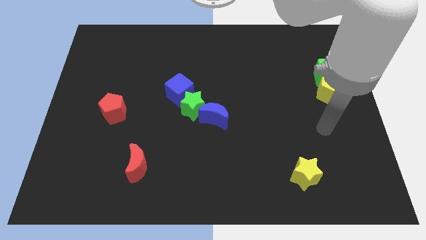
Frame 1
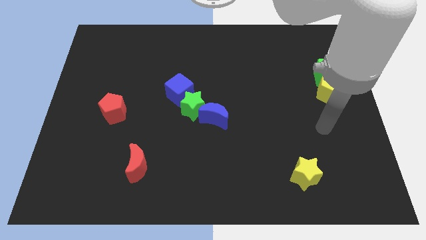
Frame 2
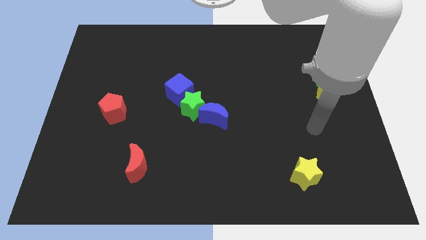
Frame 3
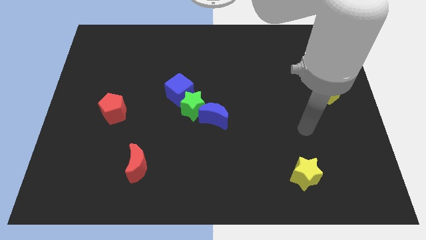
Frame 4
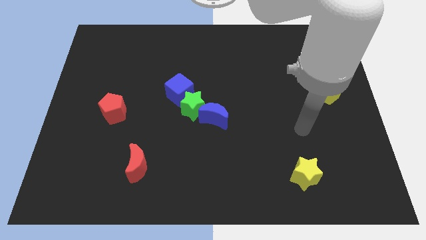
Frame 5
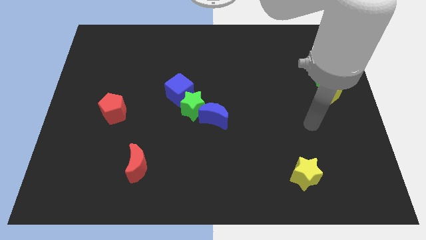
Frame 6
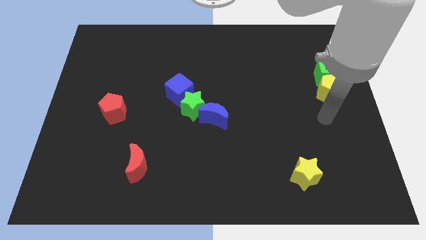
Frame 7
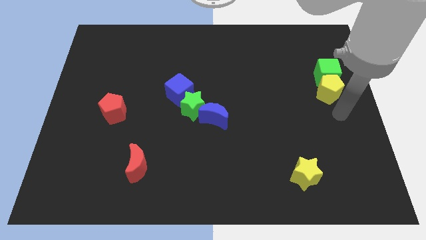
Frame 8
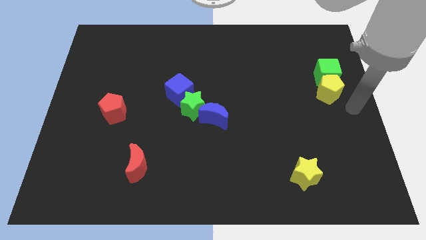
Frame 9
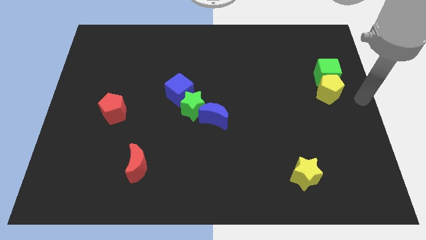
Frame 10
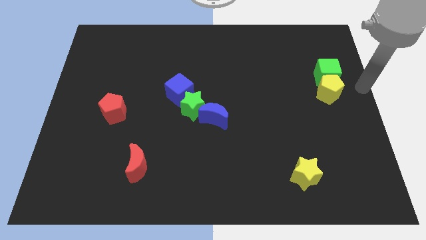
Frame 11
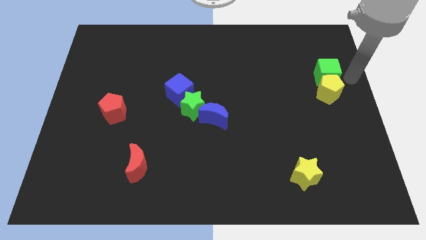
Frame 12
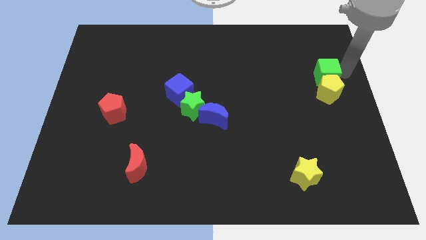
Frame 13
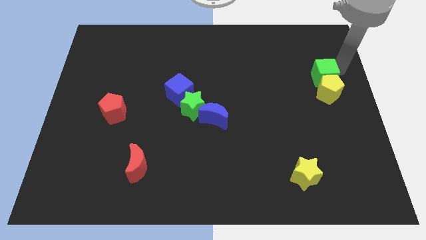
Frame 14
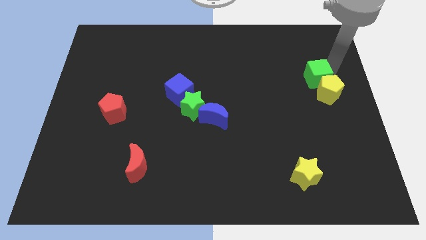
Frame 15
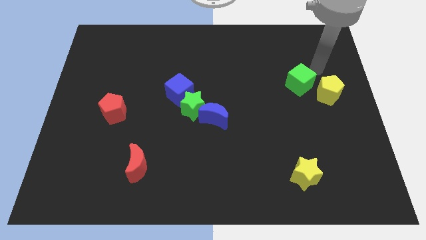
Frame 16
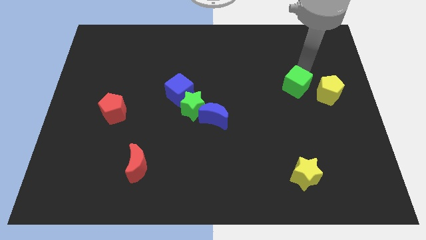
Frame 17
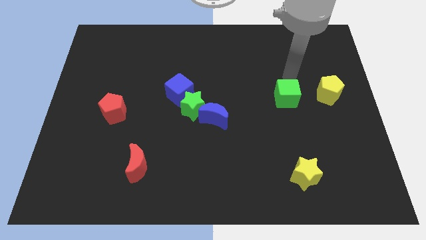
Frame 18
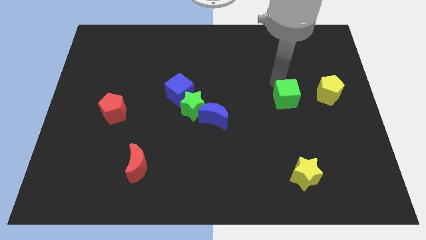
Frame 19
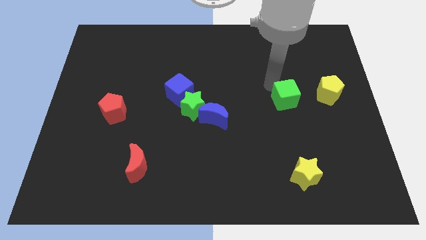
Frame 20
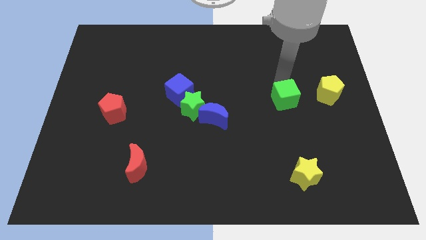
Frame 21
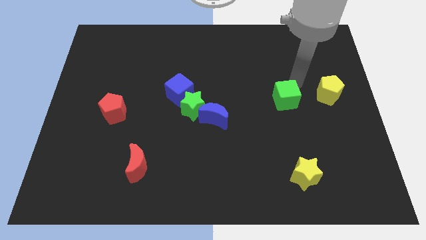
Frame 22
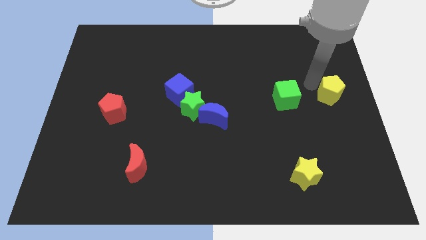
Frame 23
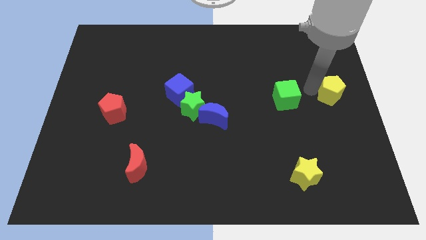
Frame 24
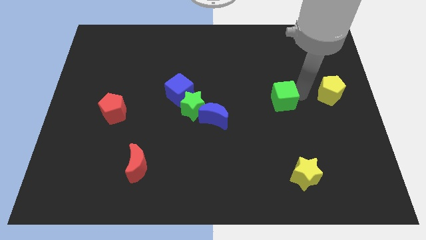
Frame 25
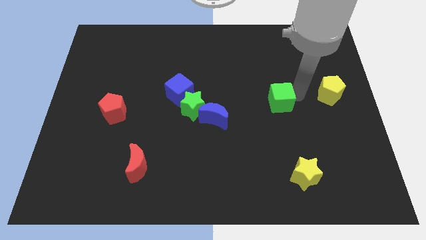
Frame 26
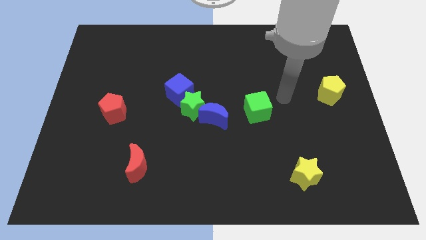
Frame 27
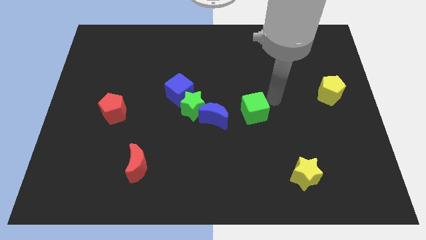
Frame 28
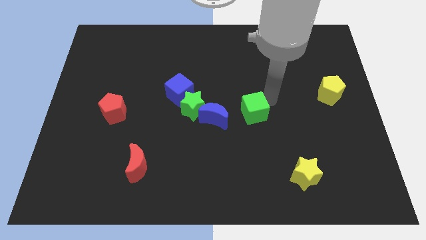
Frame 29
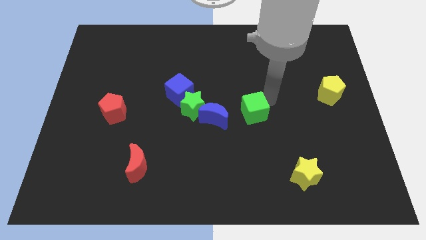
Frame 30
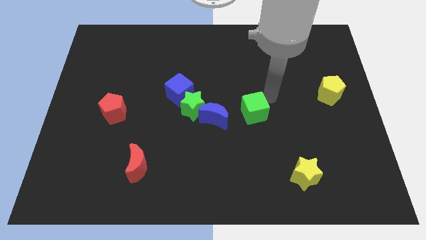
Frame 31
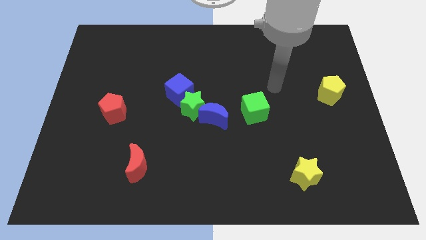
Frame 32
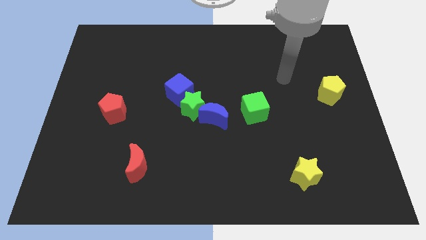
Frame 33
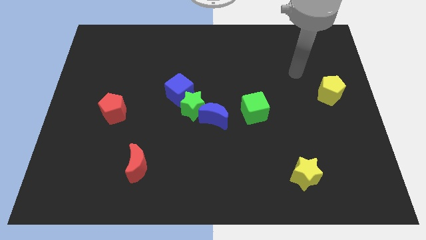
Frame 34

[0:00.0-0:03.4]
push the green cube to the right side of the blue moon

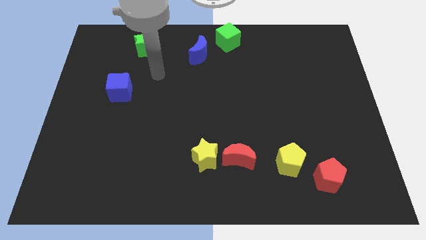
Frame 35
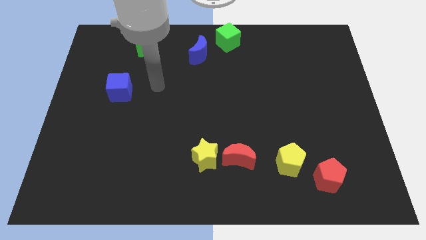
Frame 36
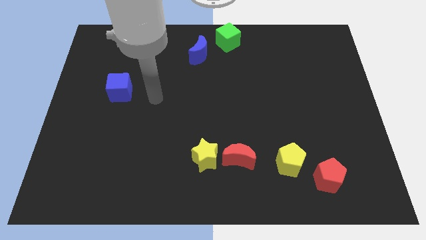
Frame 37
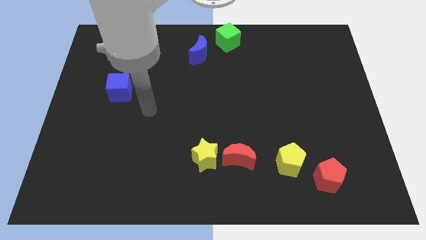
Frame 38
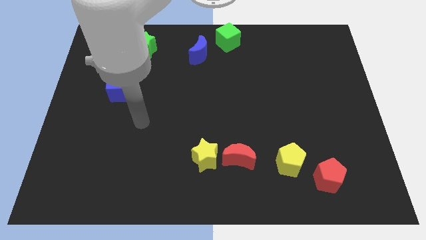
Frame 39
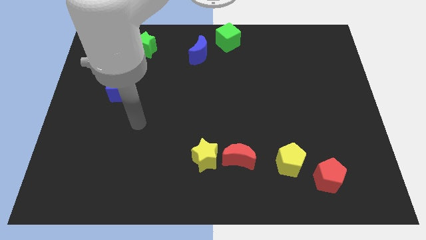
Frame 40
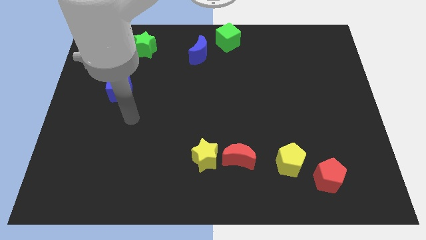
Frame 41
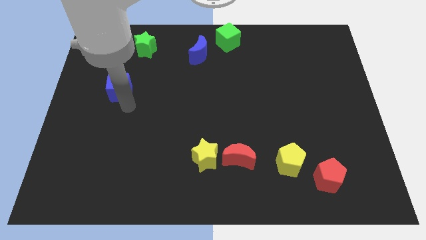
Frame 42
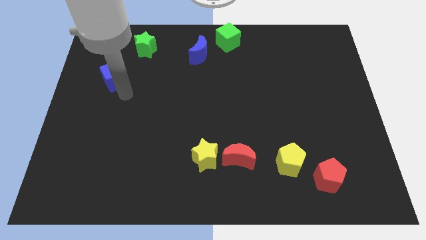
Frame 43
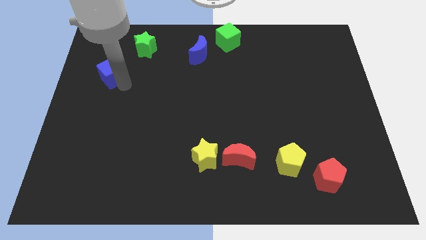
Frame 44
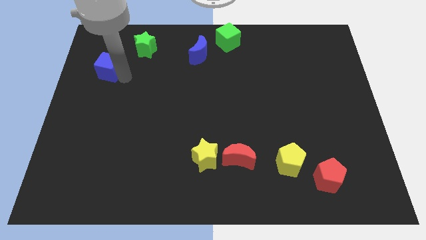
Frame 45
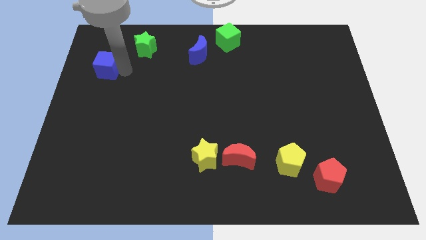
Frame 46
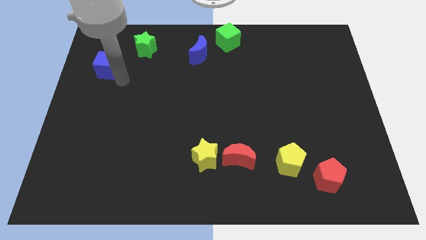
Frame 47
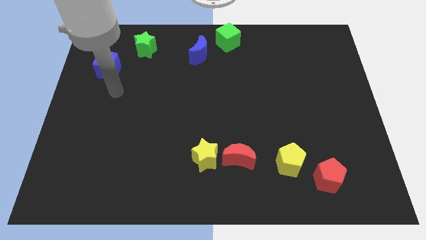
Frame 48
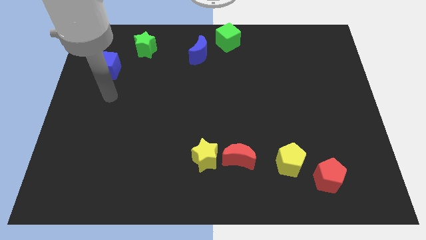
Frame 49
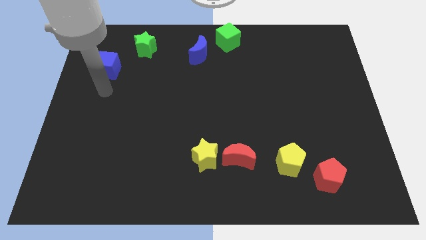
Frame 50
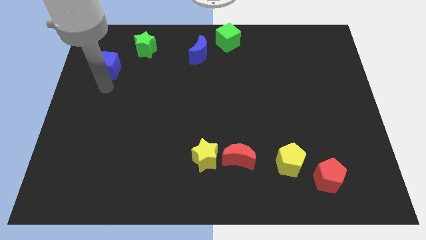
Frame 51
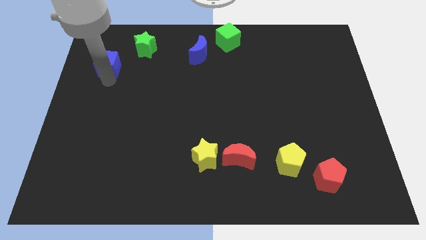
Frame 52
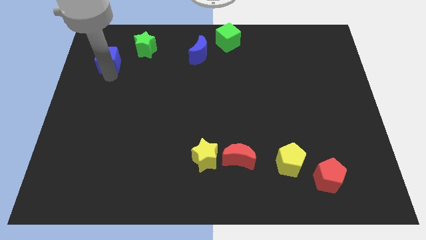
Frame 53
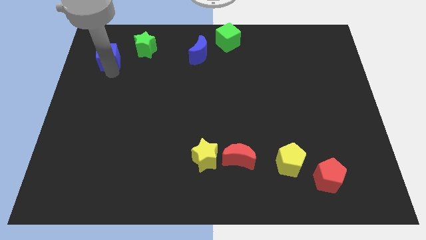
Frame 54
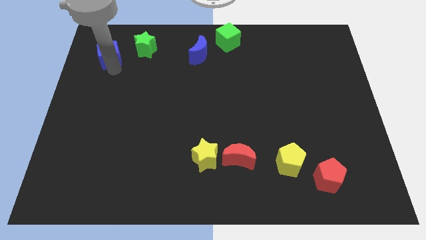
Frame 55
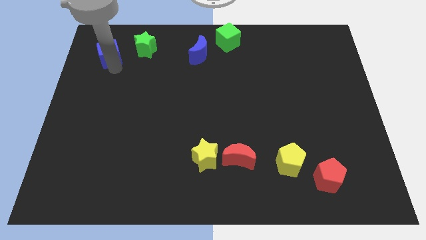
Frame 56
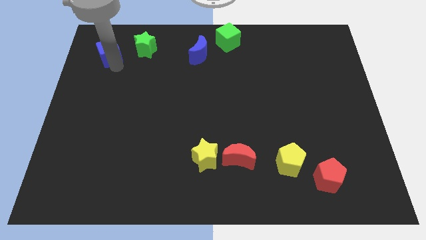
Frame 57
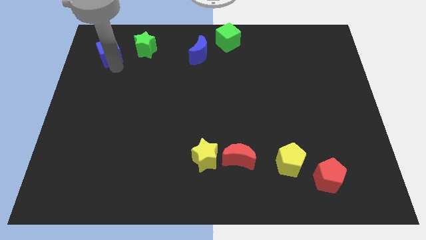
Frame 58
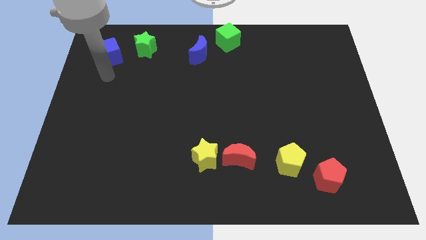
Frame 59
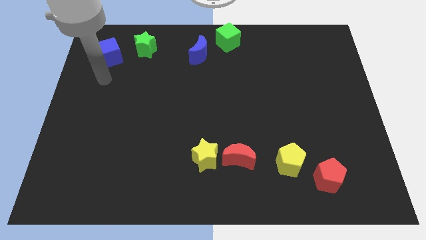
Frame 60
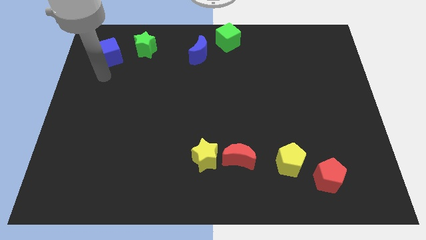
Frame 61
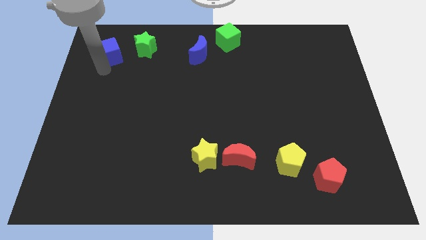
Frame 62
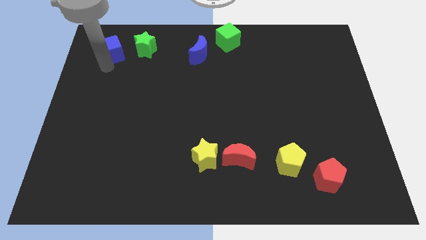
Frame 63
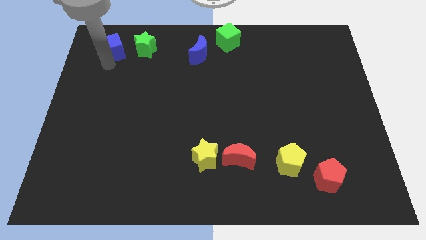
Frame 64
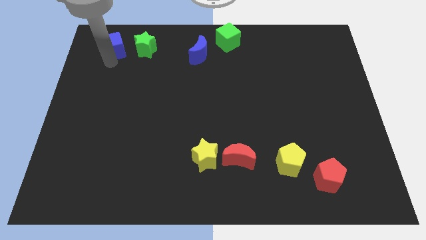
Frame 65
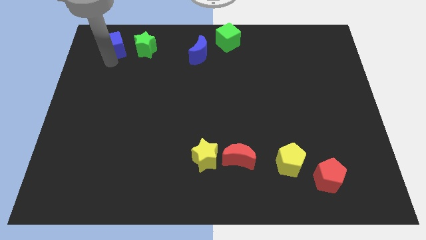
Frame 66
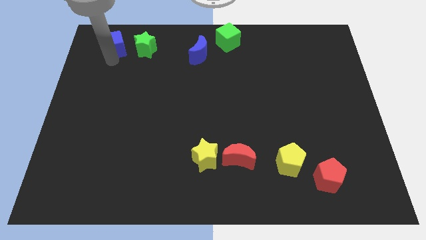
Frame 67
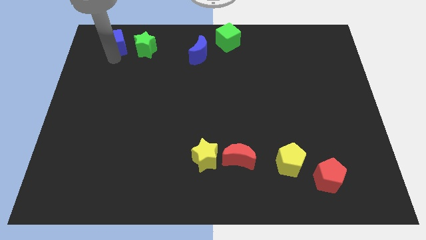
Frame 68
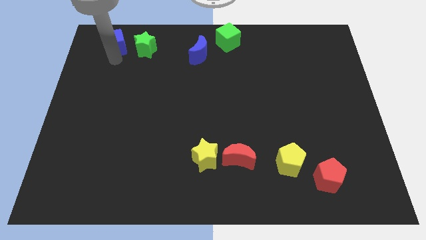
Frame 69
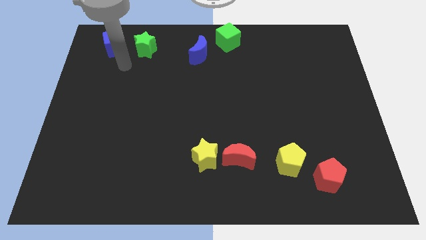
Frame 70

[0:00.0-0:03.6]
place the blue cube to the left of the green star

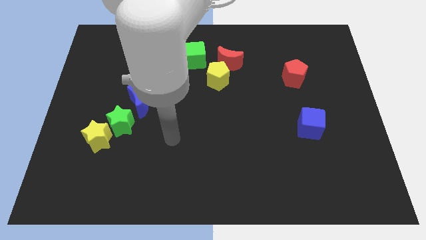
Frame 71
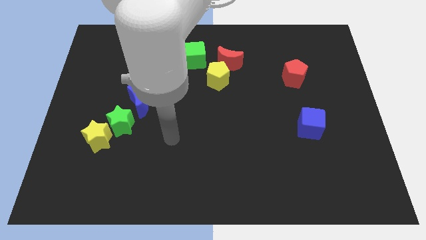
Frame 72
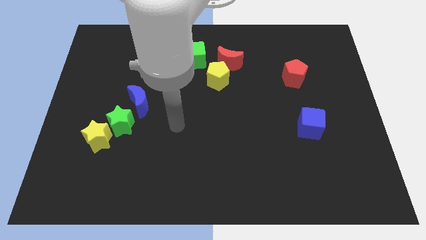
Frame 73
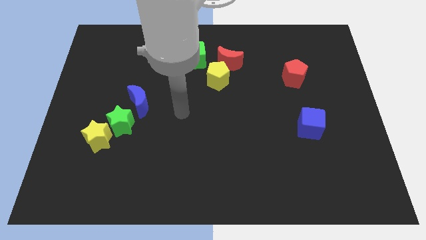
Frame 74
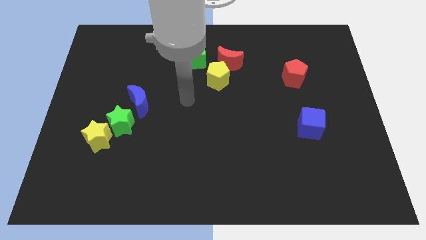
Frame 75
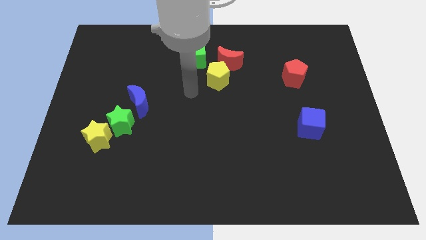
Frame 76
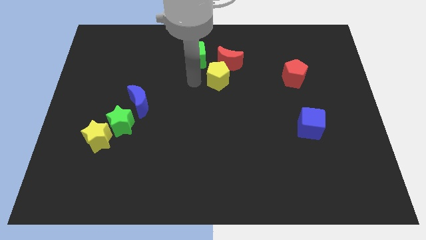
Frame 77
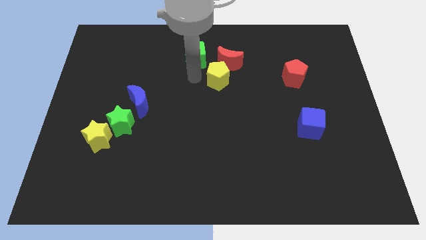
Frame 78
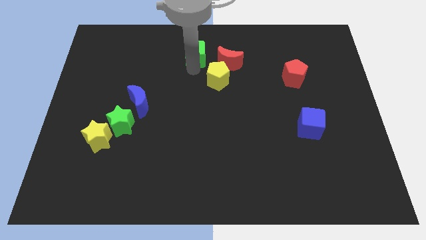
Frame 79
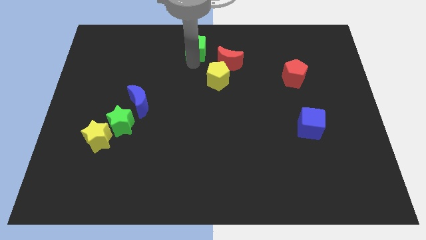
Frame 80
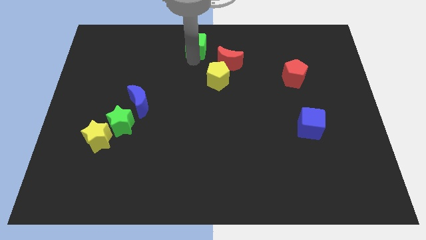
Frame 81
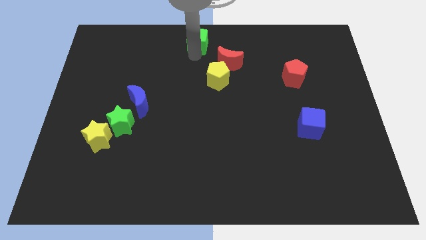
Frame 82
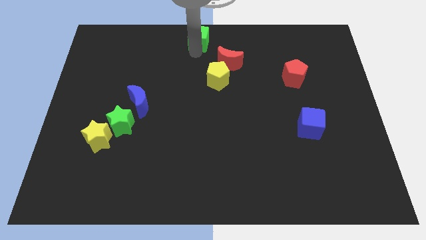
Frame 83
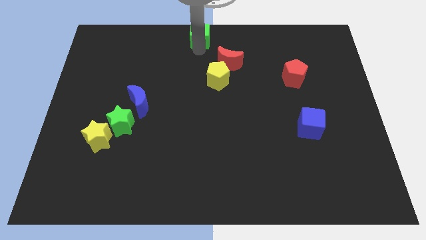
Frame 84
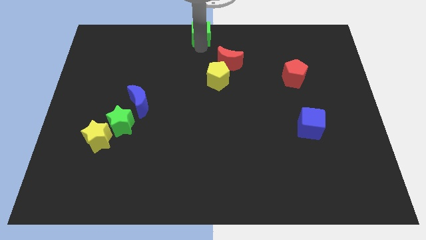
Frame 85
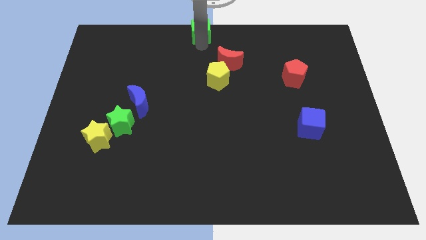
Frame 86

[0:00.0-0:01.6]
push the green cube to the top center of the board

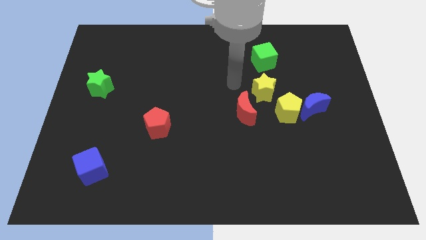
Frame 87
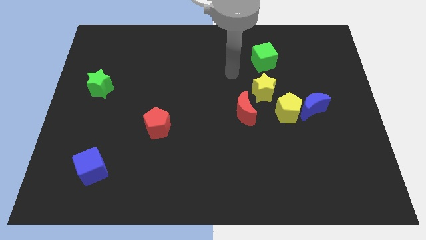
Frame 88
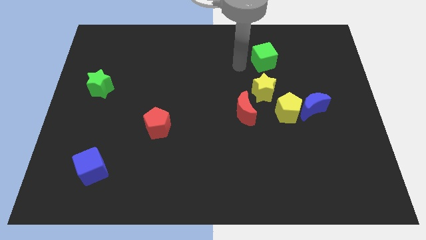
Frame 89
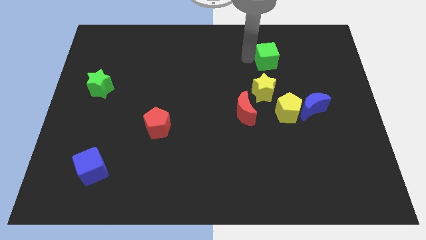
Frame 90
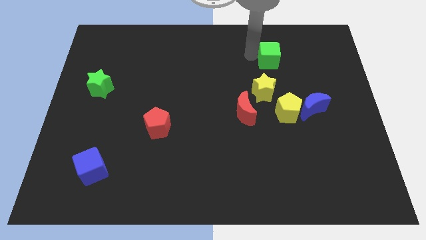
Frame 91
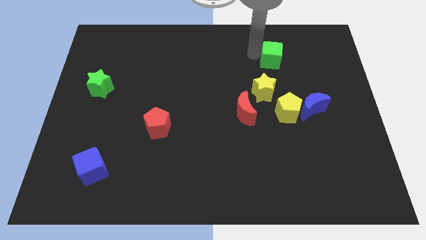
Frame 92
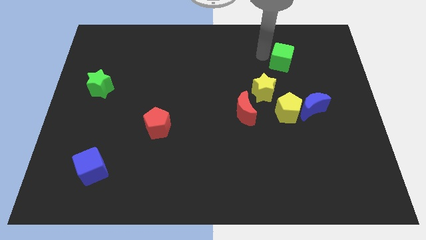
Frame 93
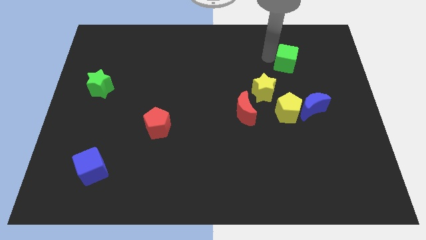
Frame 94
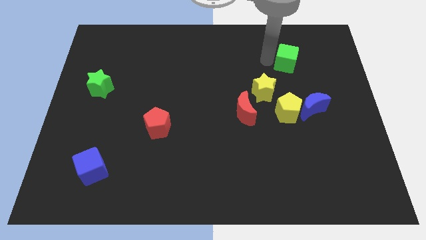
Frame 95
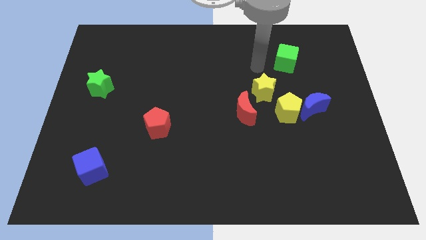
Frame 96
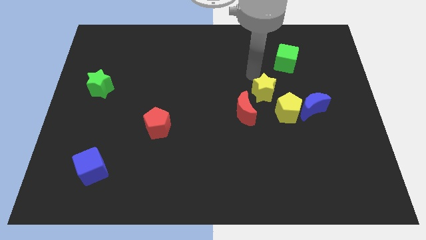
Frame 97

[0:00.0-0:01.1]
push the green cube diagonally top right to the yellow star
